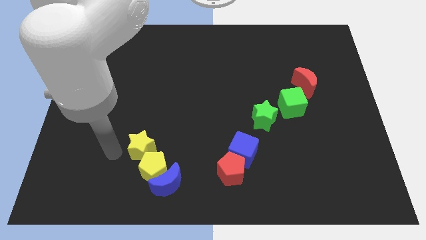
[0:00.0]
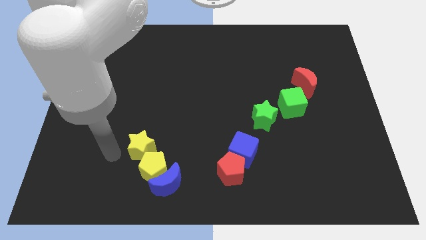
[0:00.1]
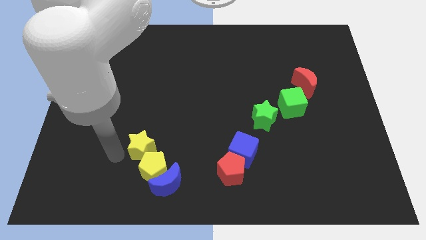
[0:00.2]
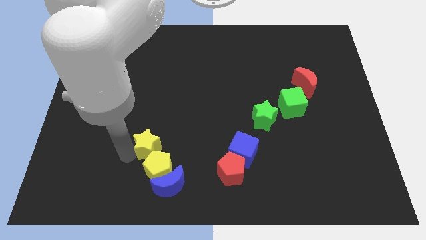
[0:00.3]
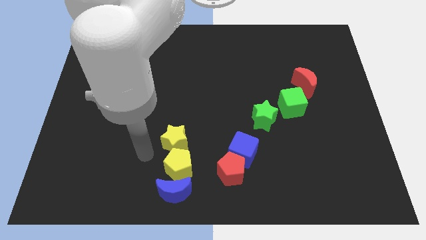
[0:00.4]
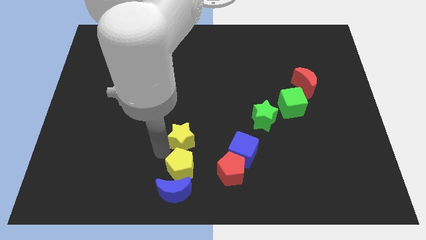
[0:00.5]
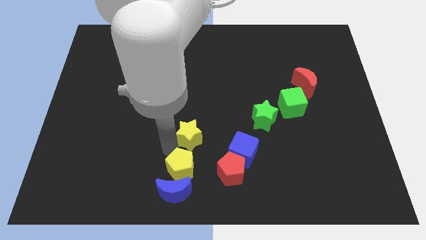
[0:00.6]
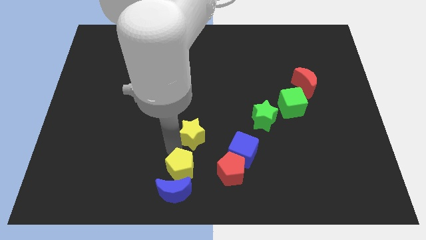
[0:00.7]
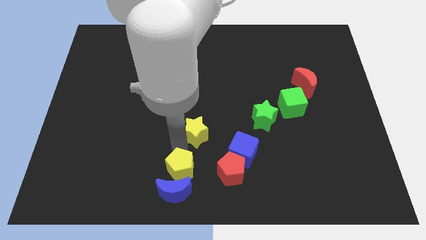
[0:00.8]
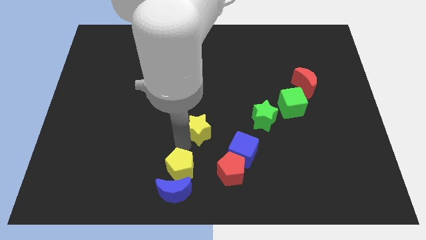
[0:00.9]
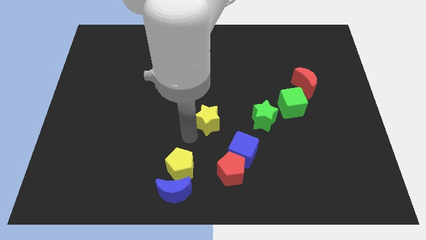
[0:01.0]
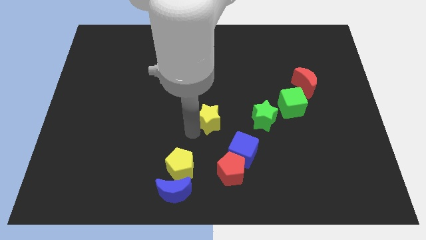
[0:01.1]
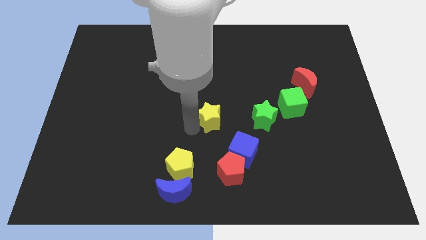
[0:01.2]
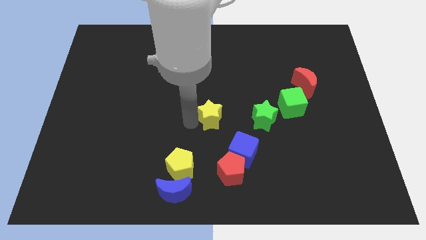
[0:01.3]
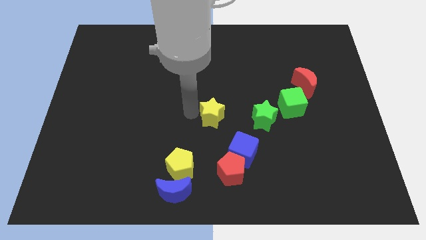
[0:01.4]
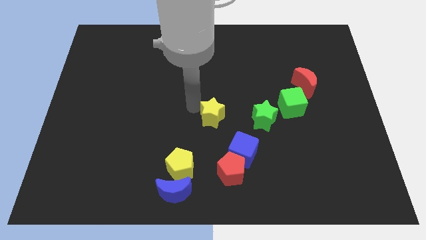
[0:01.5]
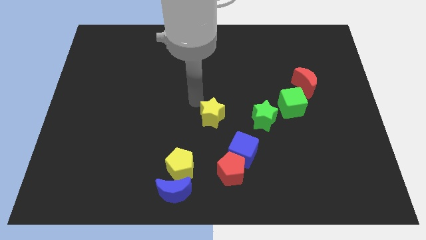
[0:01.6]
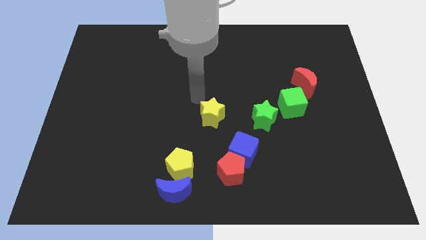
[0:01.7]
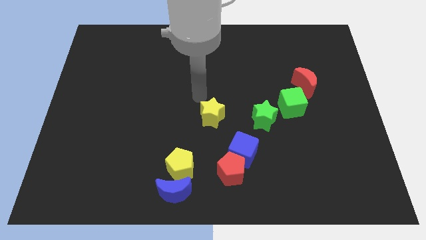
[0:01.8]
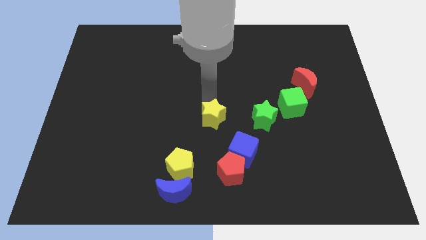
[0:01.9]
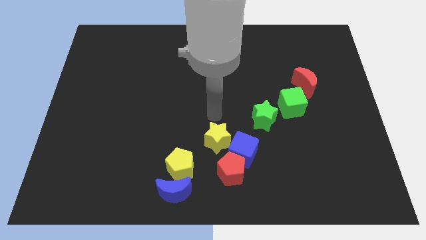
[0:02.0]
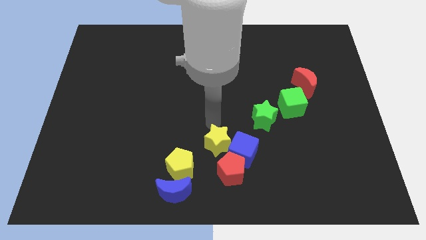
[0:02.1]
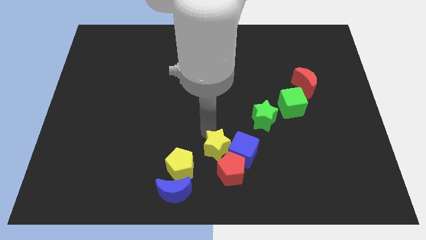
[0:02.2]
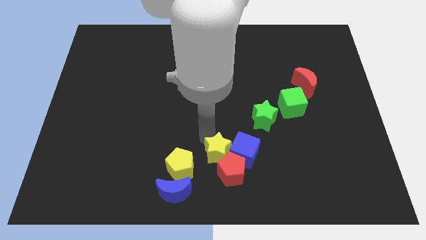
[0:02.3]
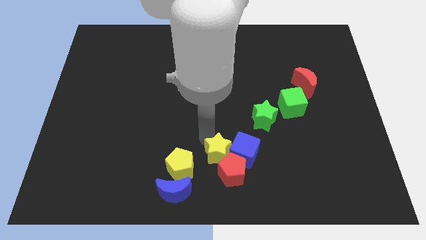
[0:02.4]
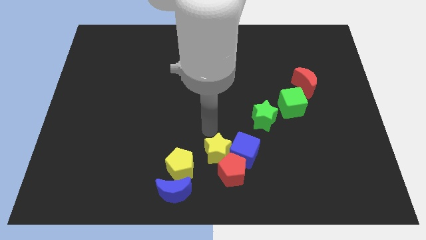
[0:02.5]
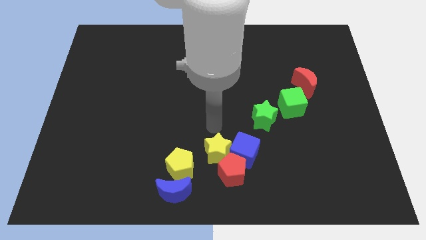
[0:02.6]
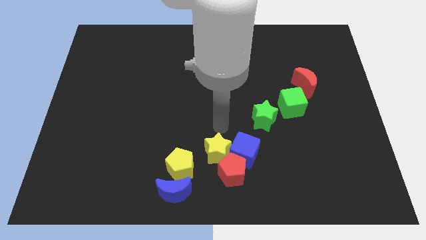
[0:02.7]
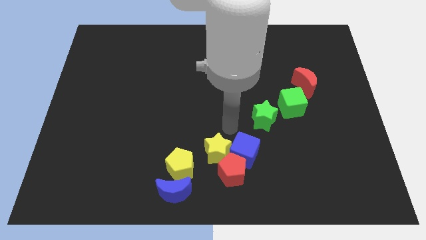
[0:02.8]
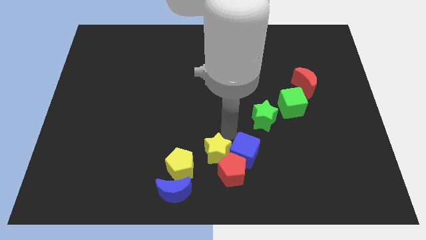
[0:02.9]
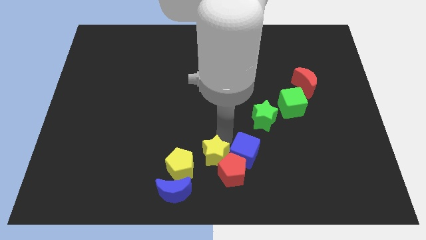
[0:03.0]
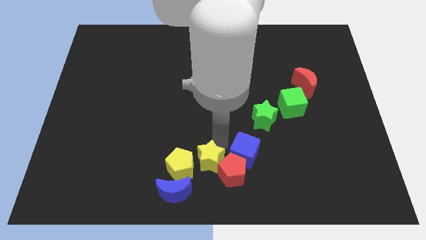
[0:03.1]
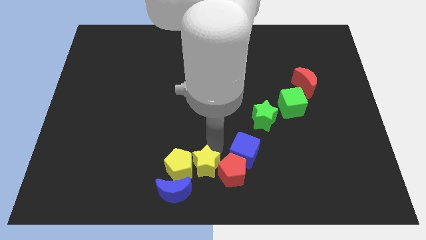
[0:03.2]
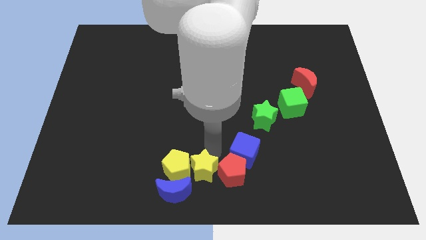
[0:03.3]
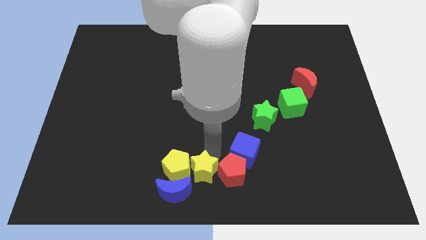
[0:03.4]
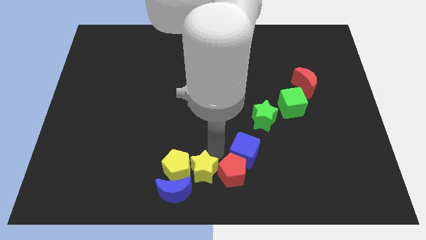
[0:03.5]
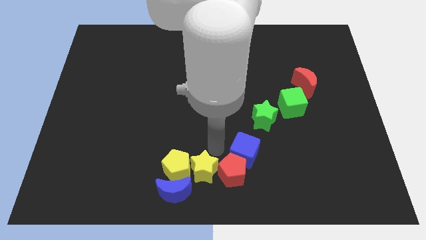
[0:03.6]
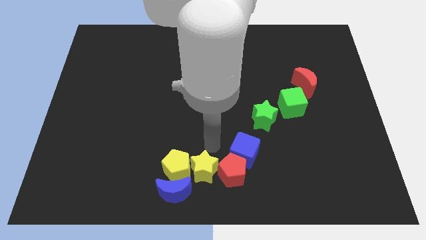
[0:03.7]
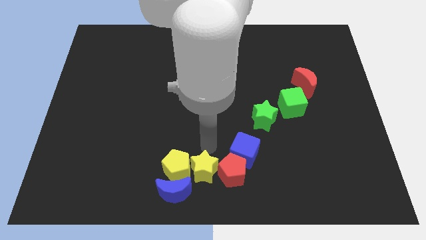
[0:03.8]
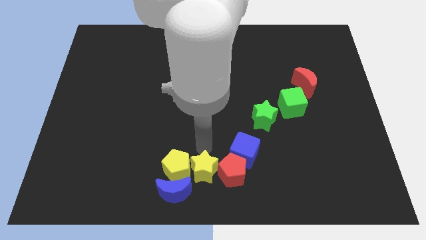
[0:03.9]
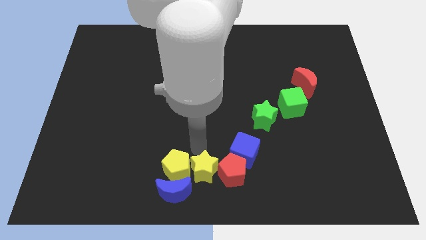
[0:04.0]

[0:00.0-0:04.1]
place the yellow star in between the red pentagon and yellow pentagon

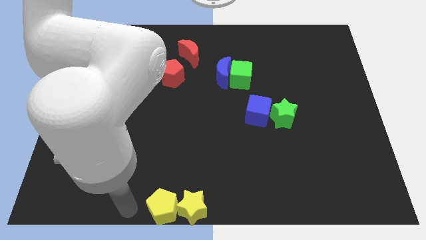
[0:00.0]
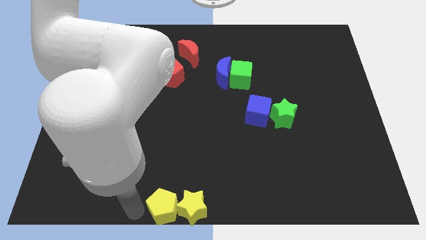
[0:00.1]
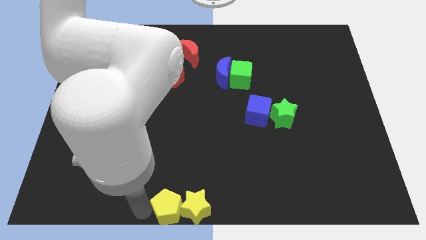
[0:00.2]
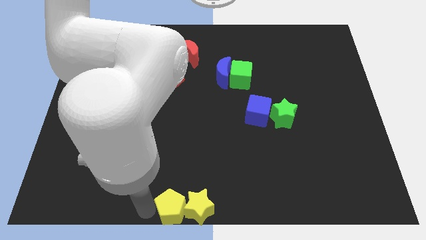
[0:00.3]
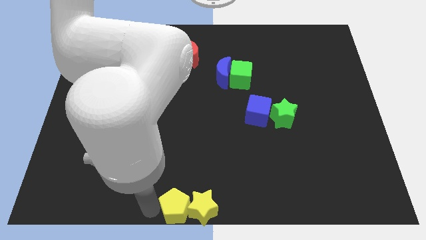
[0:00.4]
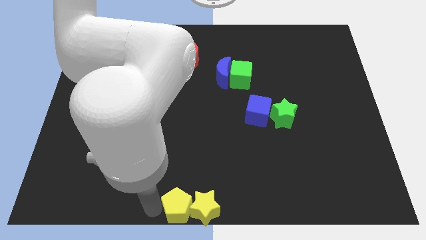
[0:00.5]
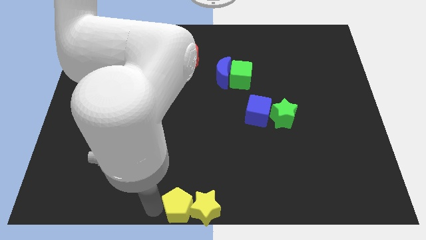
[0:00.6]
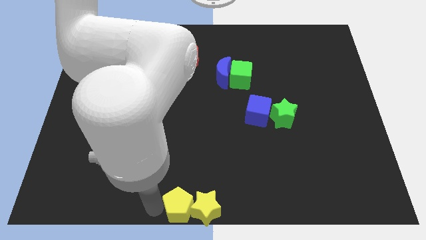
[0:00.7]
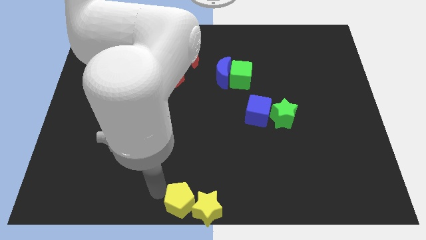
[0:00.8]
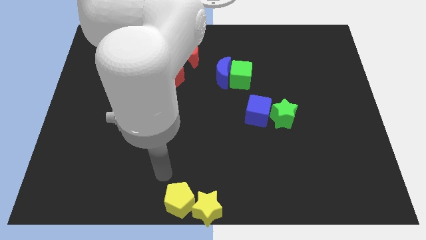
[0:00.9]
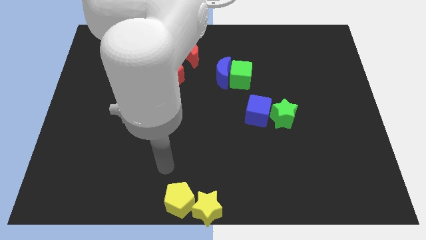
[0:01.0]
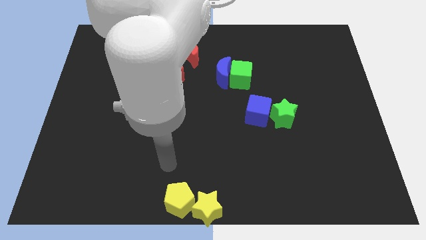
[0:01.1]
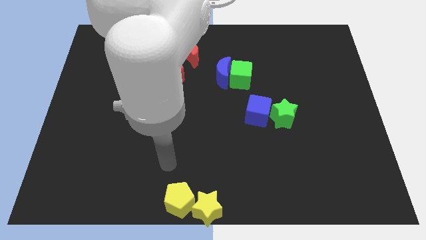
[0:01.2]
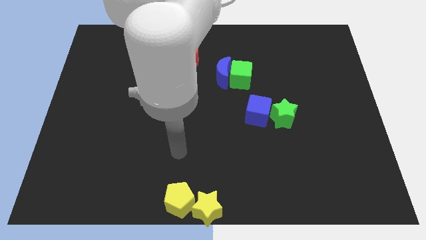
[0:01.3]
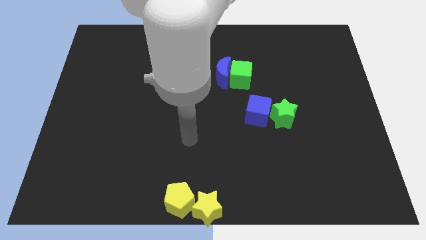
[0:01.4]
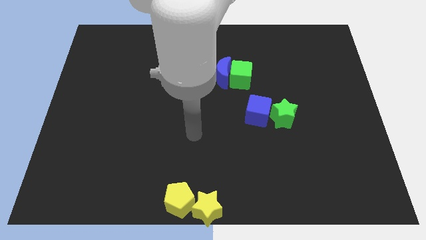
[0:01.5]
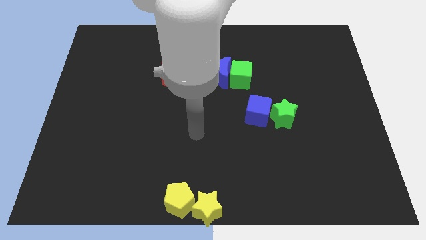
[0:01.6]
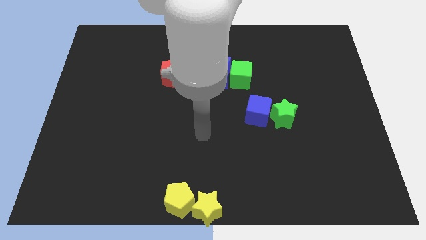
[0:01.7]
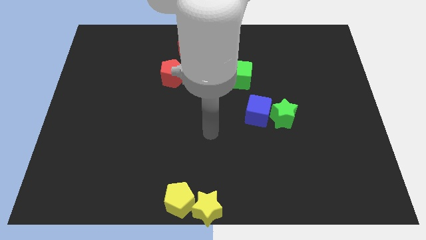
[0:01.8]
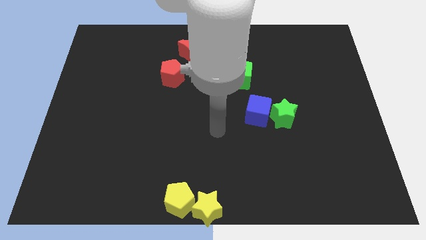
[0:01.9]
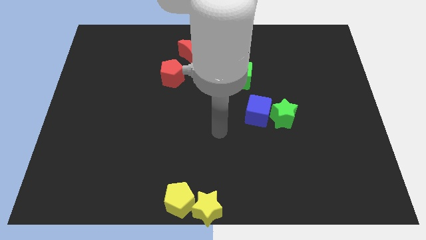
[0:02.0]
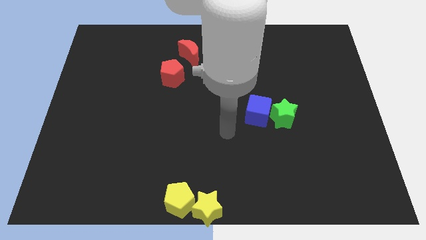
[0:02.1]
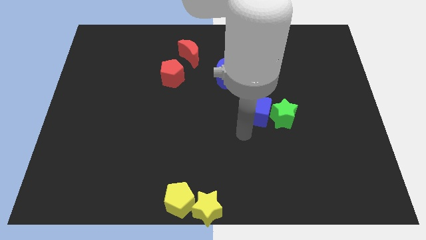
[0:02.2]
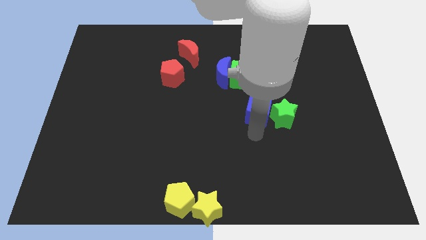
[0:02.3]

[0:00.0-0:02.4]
move the arm away from the yellow pentagon

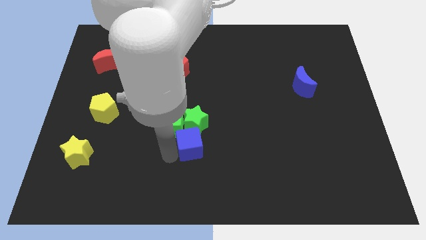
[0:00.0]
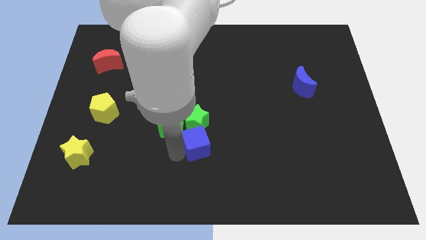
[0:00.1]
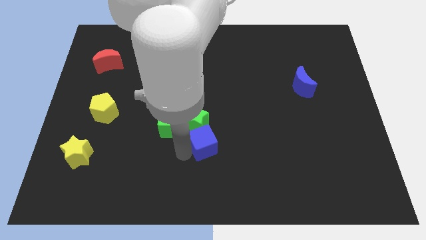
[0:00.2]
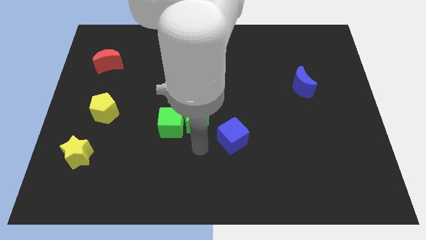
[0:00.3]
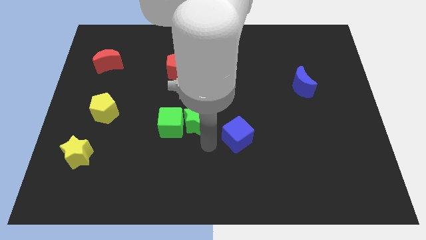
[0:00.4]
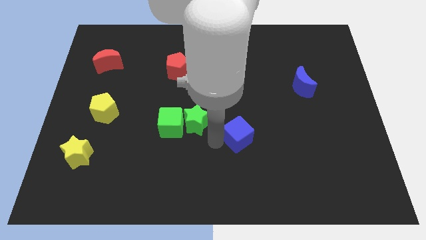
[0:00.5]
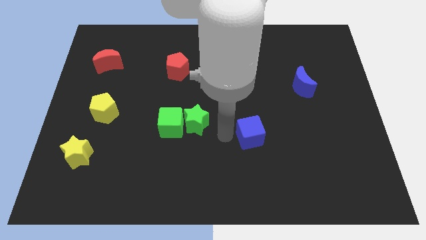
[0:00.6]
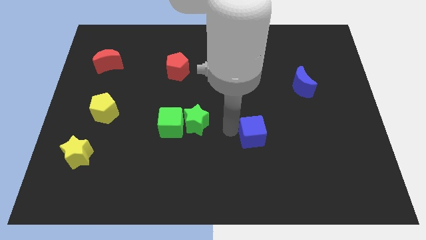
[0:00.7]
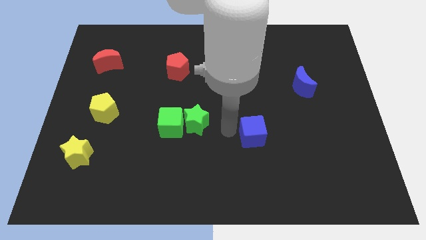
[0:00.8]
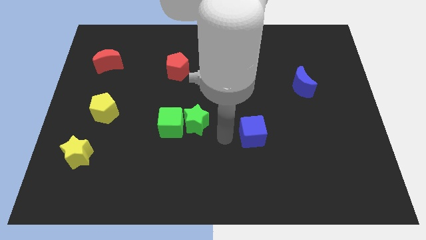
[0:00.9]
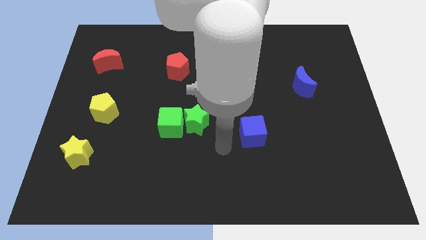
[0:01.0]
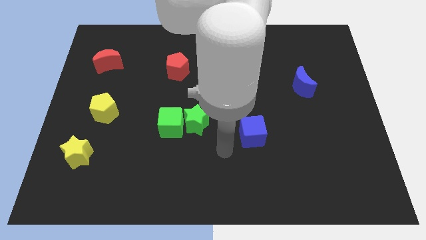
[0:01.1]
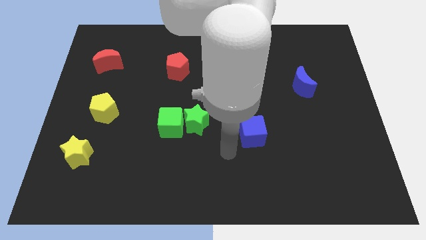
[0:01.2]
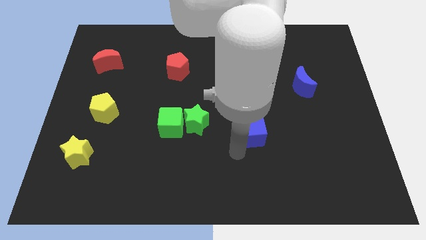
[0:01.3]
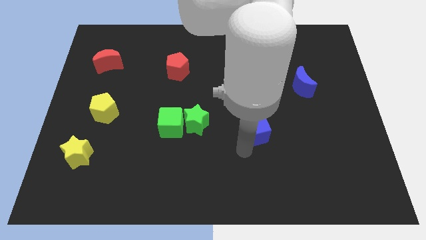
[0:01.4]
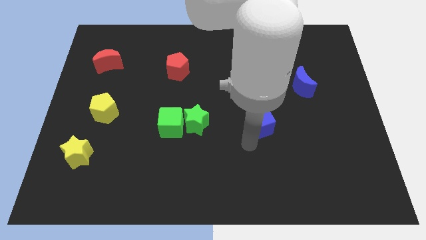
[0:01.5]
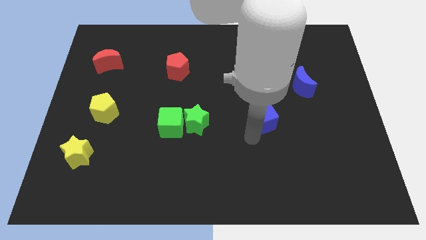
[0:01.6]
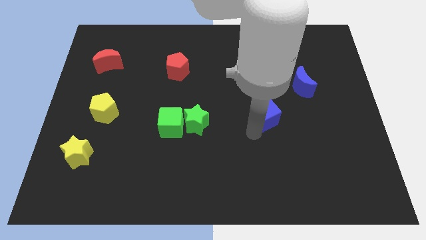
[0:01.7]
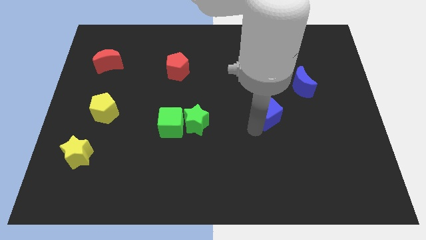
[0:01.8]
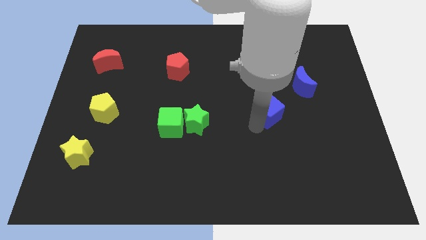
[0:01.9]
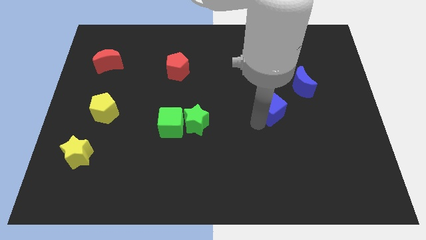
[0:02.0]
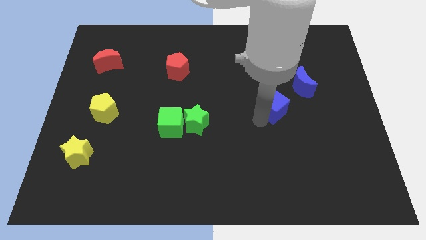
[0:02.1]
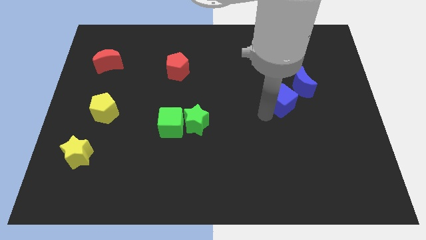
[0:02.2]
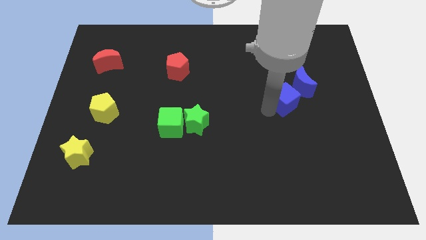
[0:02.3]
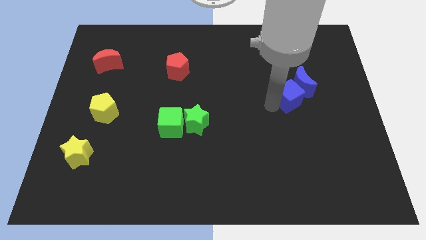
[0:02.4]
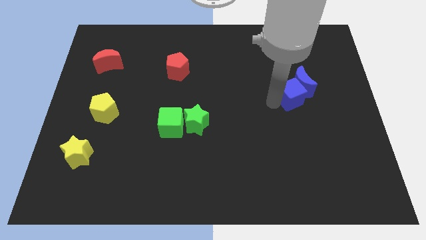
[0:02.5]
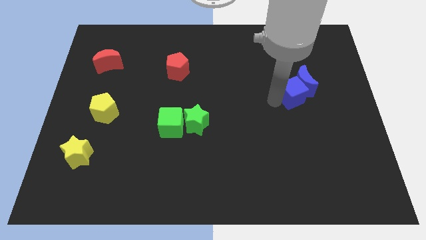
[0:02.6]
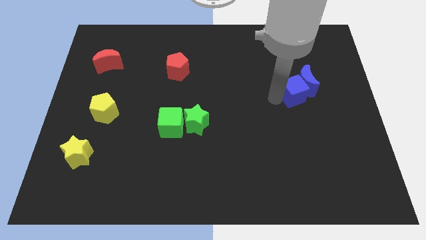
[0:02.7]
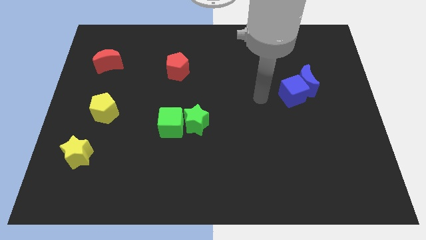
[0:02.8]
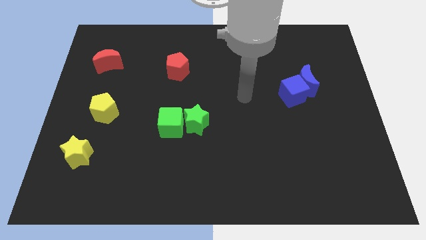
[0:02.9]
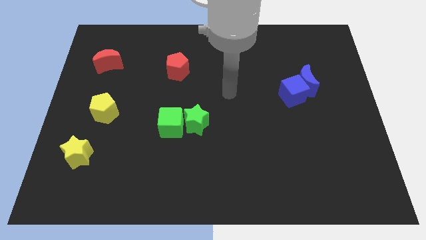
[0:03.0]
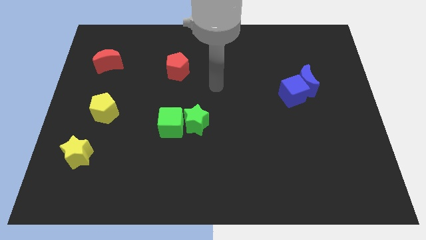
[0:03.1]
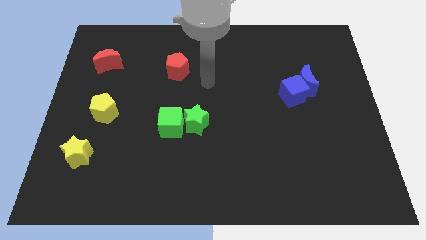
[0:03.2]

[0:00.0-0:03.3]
move blue cube into blue moon
